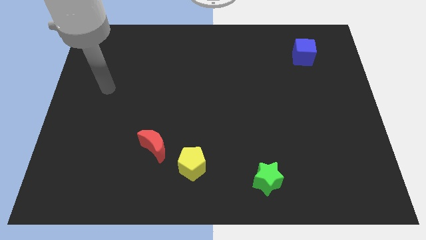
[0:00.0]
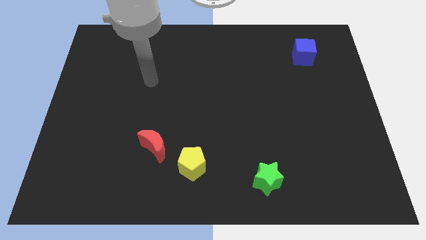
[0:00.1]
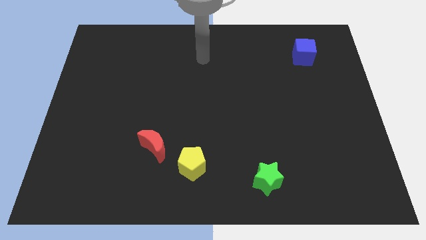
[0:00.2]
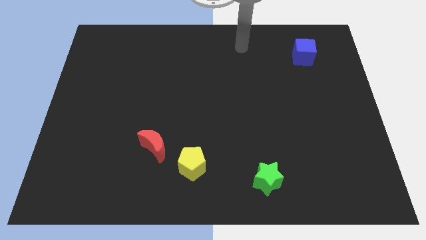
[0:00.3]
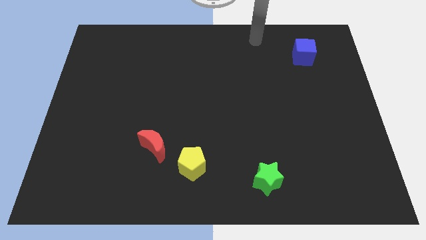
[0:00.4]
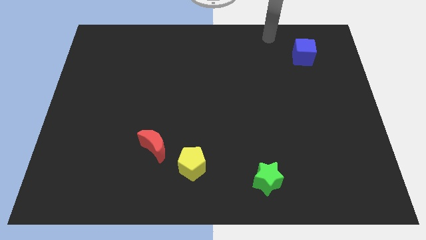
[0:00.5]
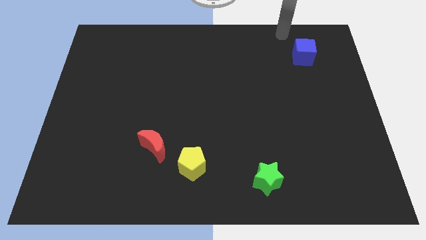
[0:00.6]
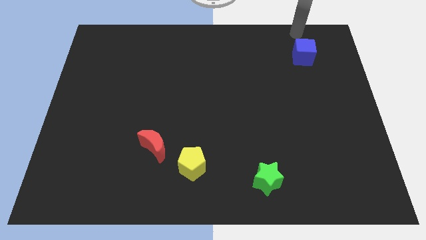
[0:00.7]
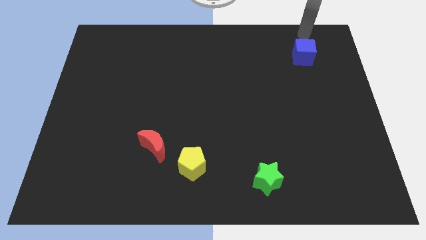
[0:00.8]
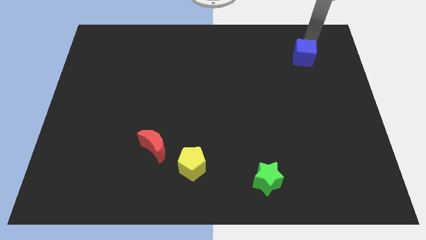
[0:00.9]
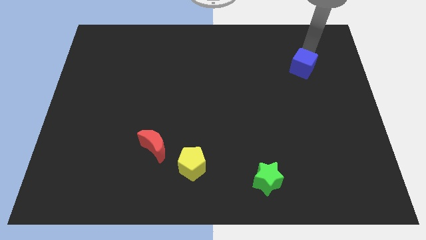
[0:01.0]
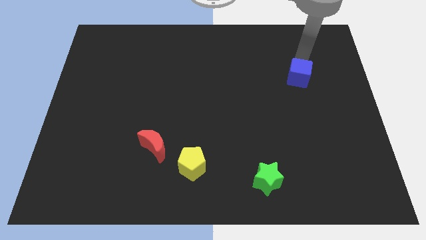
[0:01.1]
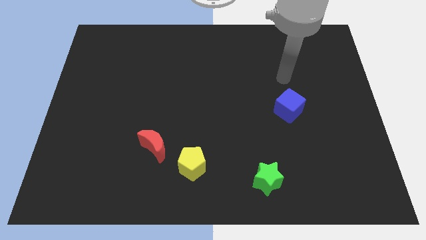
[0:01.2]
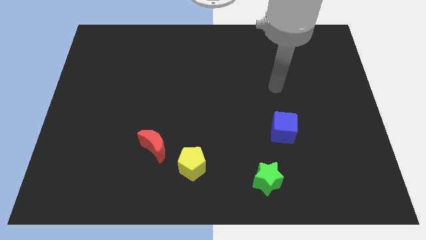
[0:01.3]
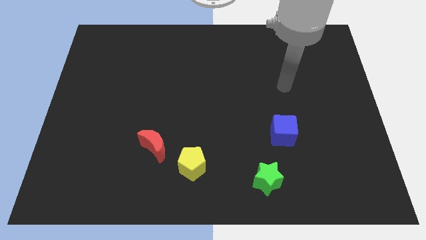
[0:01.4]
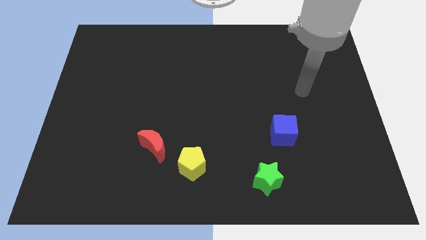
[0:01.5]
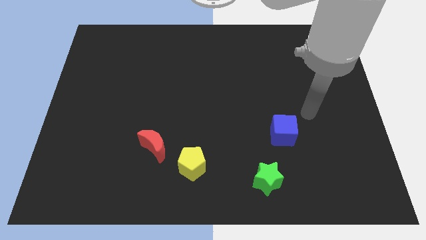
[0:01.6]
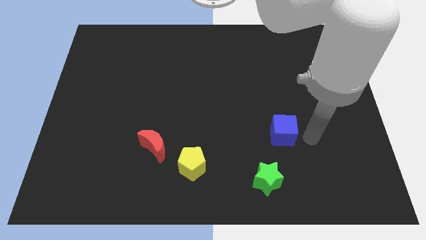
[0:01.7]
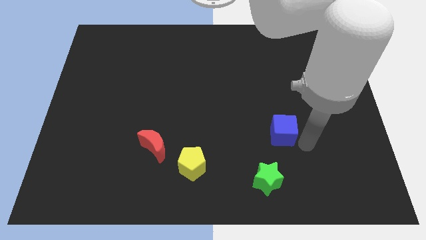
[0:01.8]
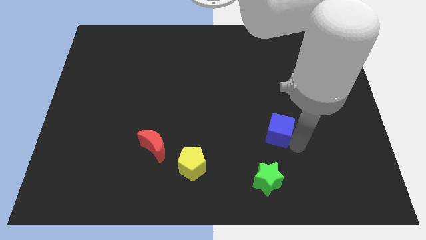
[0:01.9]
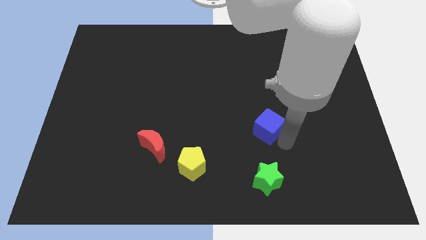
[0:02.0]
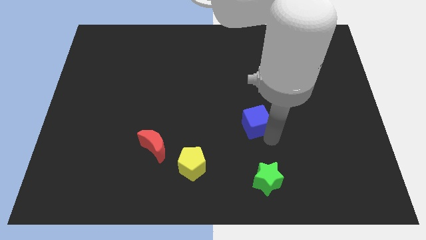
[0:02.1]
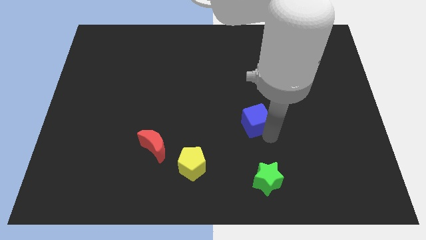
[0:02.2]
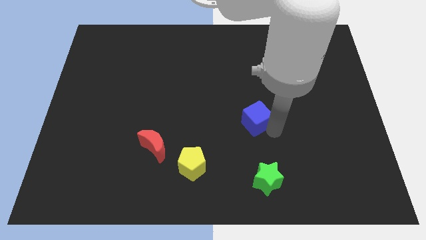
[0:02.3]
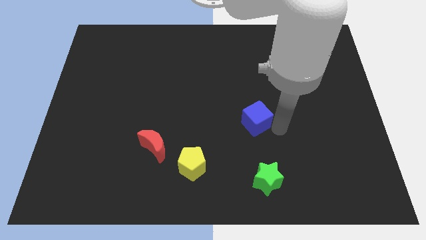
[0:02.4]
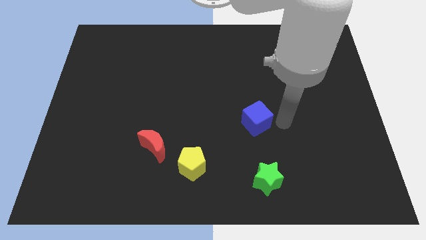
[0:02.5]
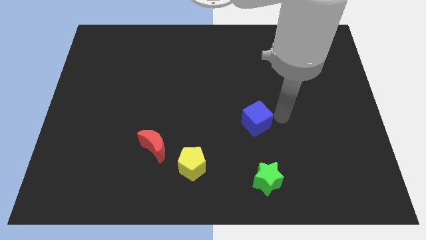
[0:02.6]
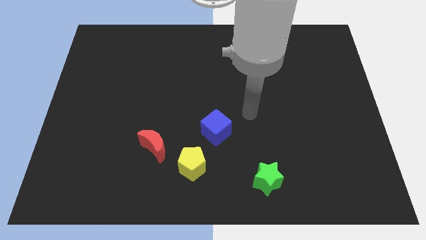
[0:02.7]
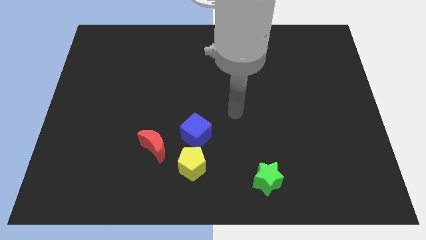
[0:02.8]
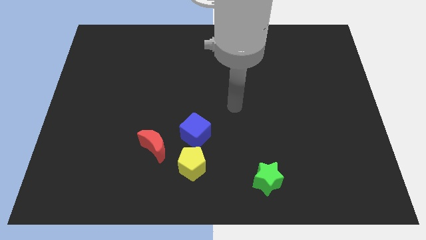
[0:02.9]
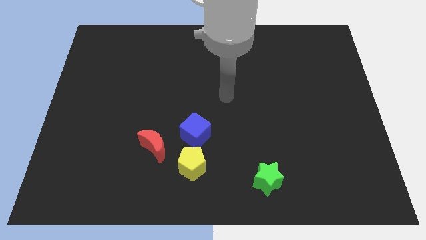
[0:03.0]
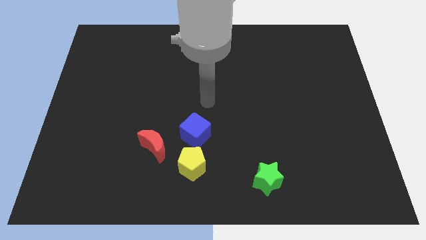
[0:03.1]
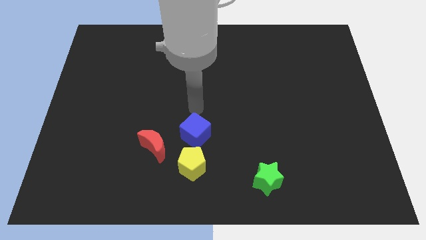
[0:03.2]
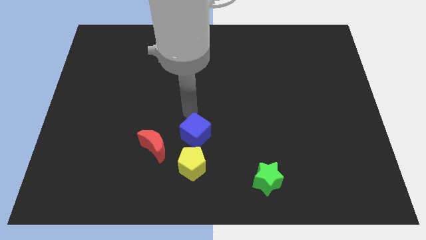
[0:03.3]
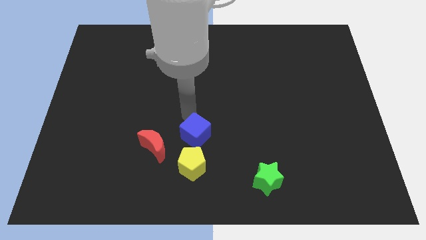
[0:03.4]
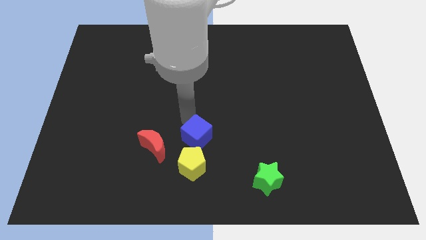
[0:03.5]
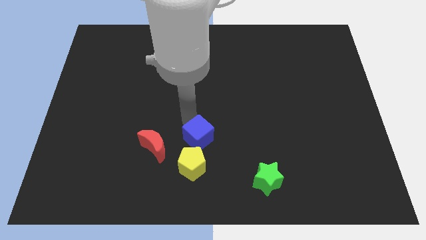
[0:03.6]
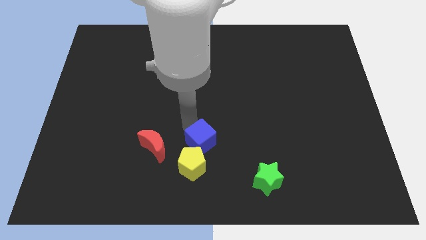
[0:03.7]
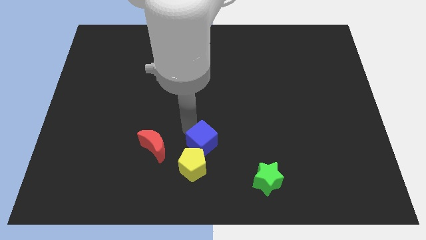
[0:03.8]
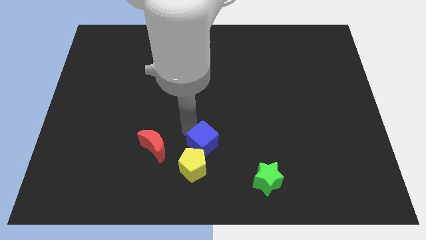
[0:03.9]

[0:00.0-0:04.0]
move the cube close to the yellow block

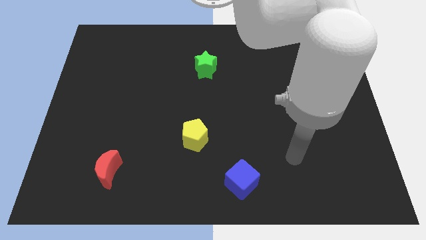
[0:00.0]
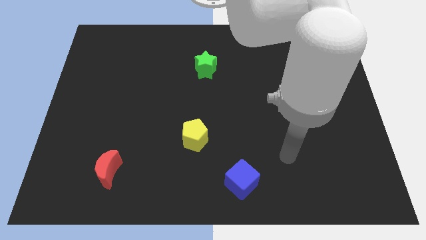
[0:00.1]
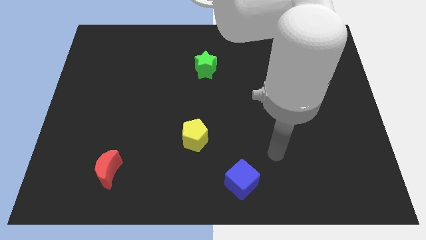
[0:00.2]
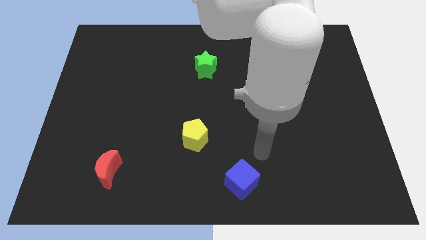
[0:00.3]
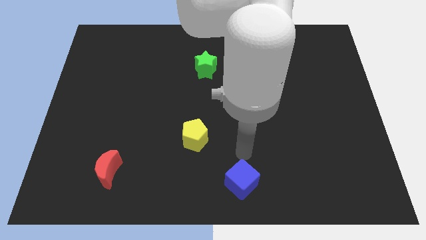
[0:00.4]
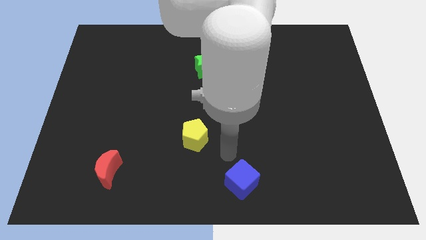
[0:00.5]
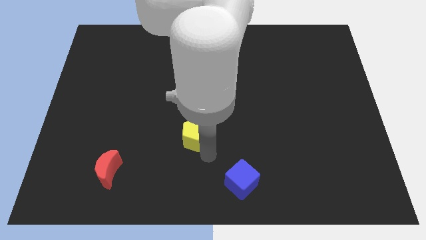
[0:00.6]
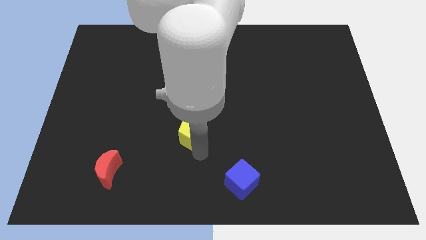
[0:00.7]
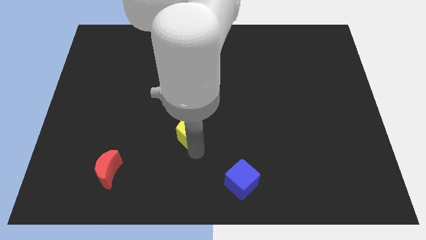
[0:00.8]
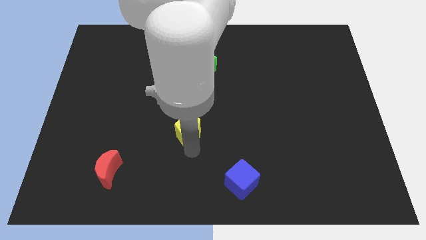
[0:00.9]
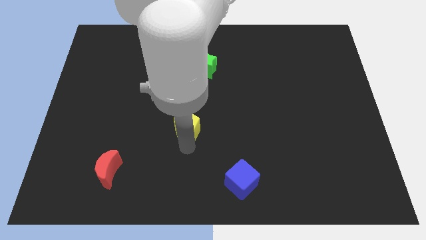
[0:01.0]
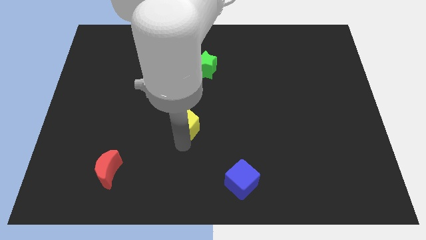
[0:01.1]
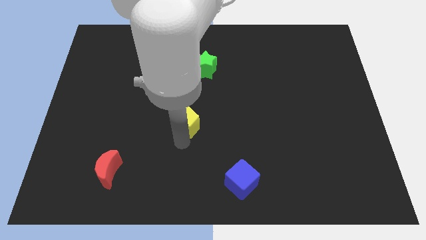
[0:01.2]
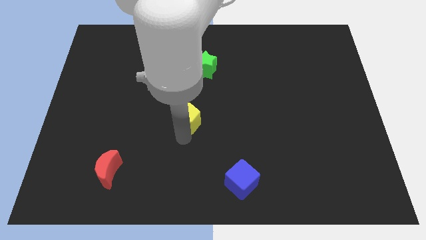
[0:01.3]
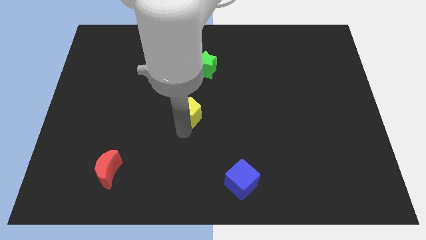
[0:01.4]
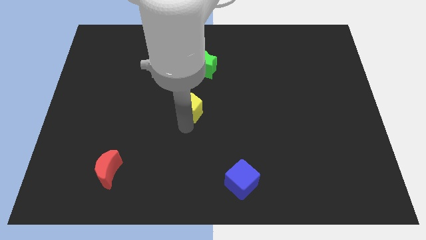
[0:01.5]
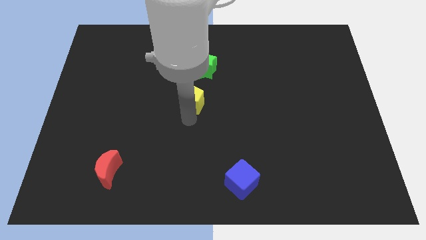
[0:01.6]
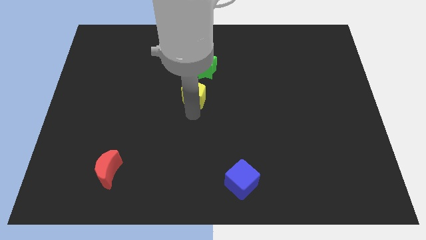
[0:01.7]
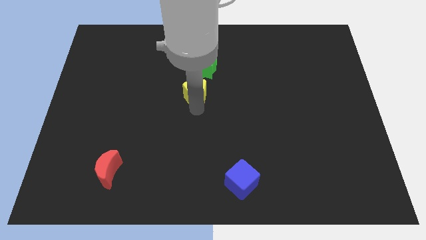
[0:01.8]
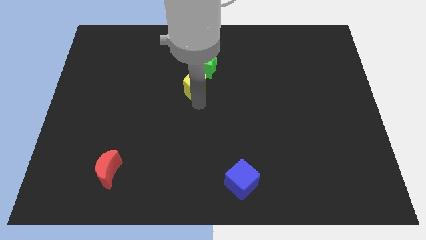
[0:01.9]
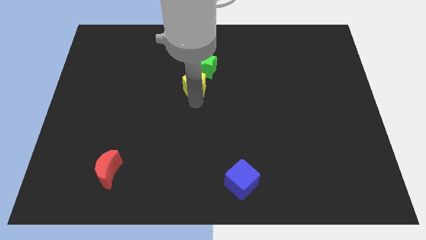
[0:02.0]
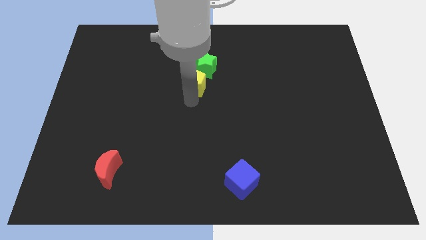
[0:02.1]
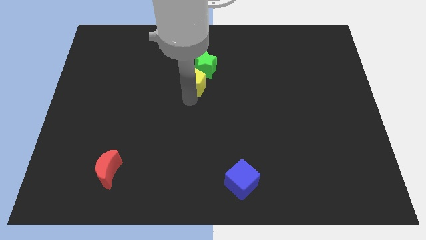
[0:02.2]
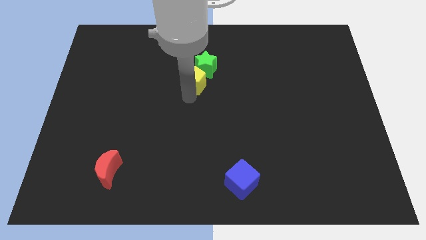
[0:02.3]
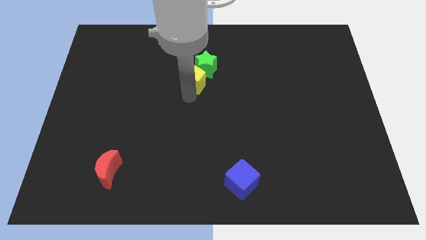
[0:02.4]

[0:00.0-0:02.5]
slide the pentagon to the green block

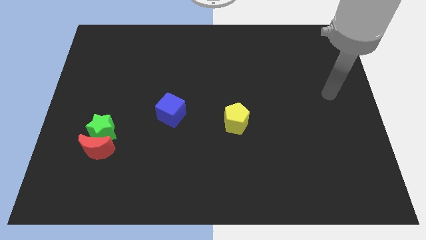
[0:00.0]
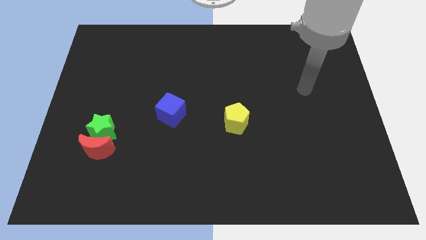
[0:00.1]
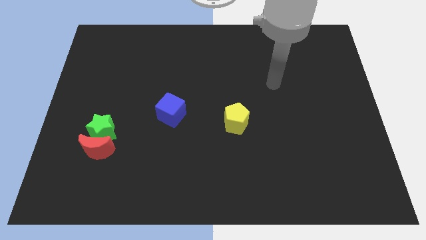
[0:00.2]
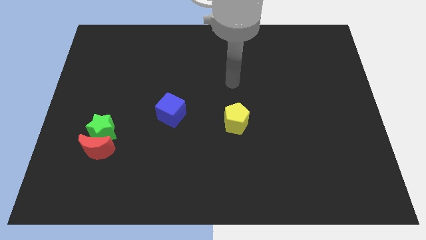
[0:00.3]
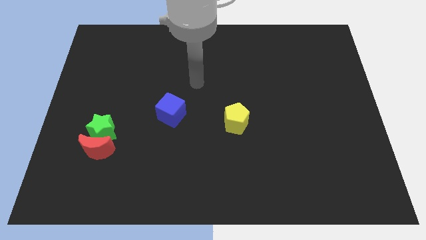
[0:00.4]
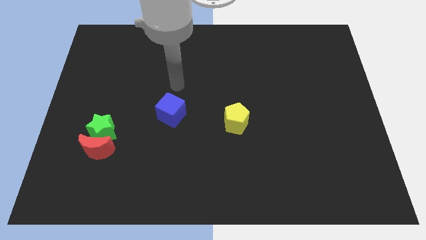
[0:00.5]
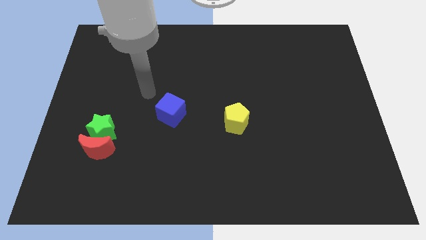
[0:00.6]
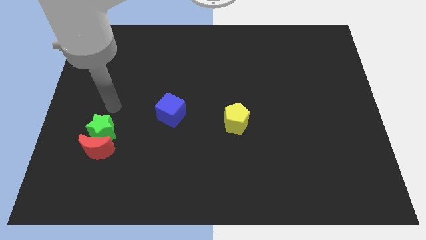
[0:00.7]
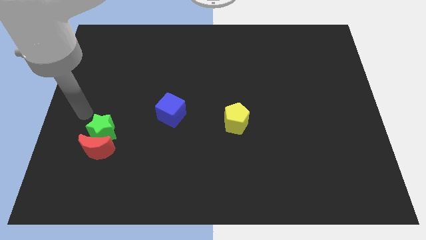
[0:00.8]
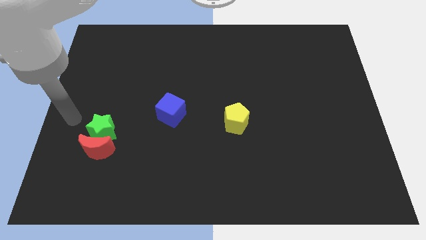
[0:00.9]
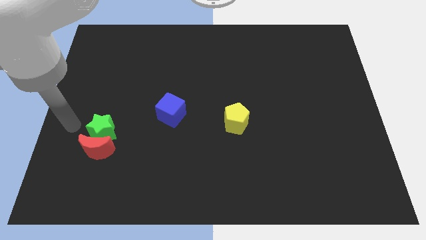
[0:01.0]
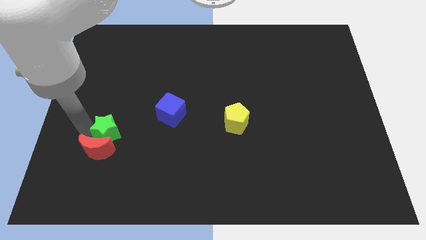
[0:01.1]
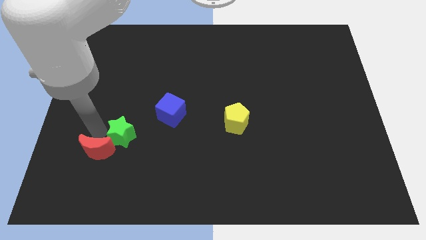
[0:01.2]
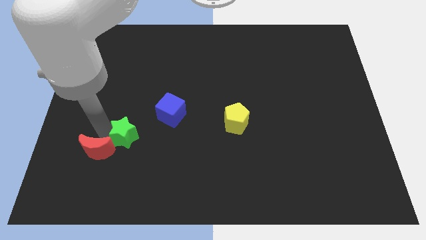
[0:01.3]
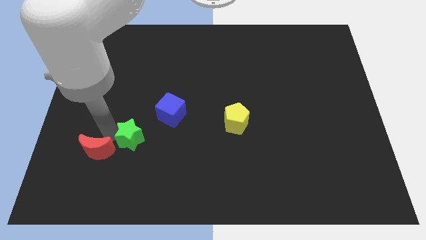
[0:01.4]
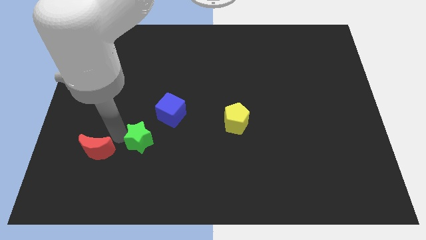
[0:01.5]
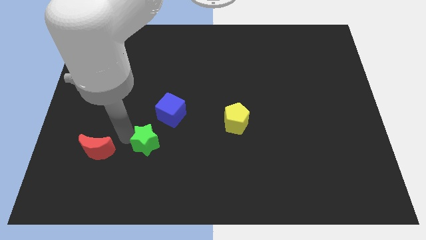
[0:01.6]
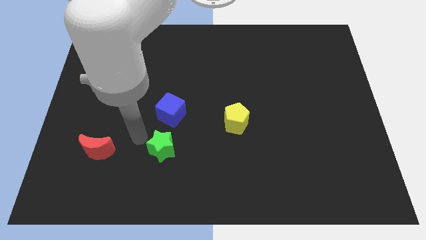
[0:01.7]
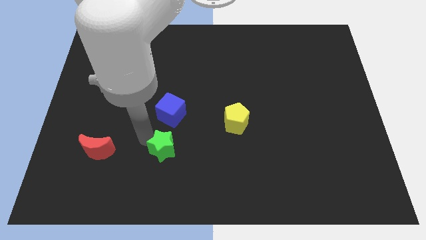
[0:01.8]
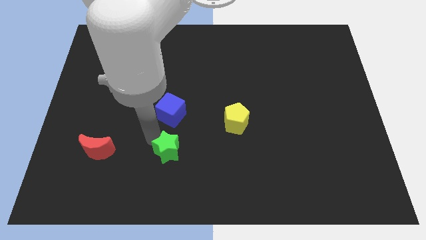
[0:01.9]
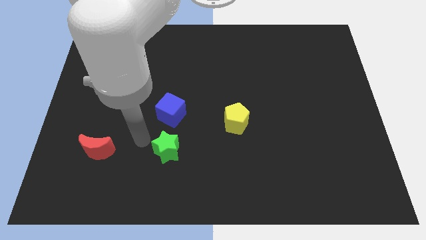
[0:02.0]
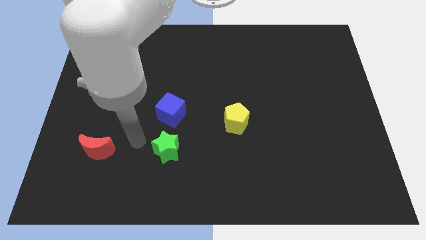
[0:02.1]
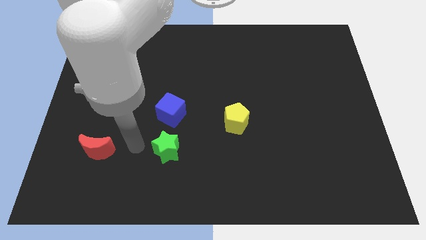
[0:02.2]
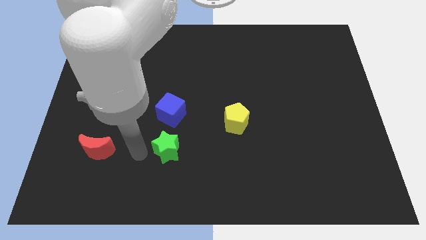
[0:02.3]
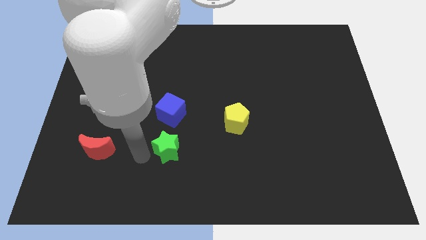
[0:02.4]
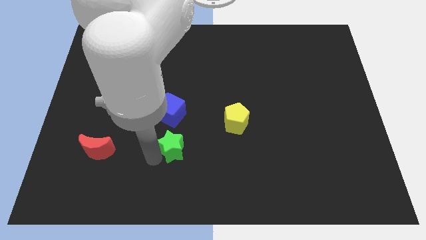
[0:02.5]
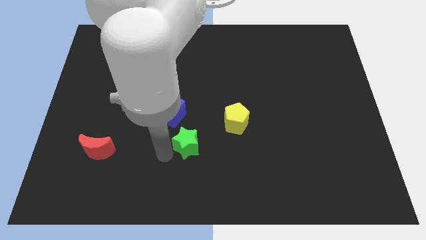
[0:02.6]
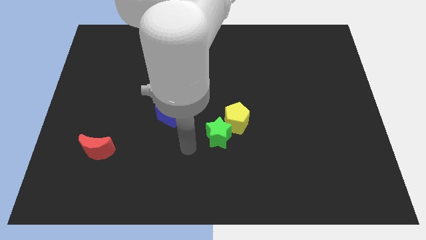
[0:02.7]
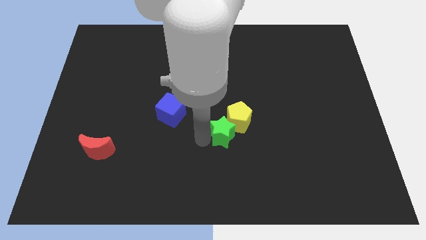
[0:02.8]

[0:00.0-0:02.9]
slide the green star next to the yellow block
